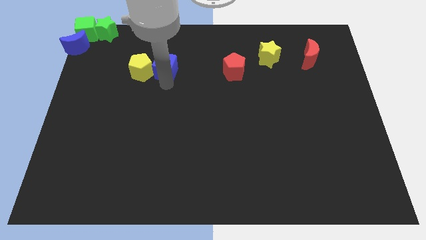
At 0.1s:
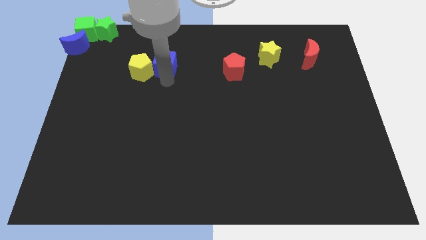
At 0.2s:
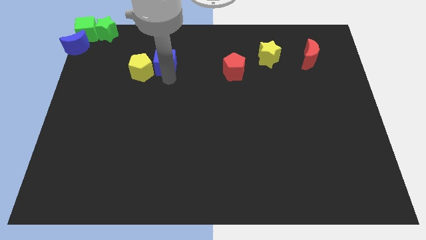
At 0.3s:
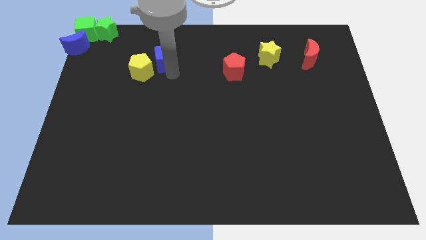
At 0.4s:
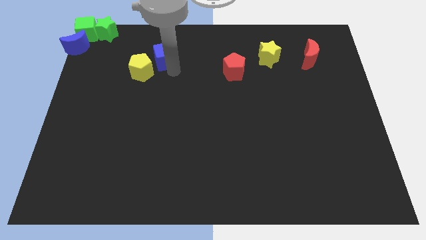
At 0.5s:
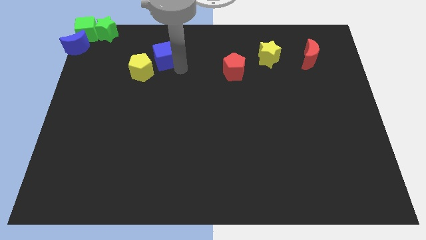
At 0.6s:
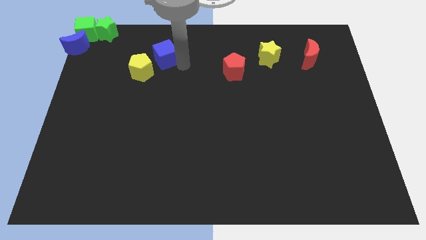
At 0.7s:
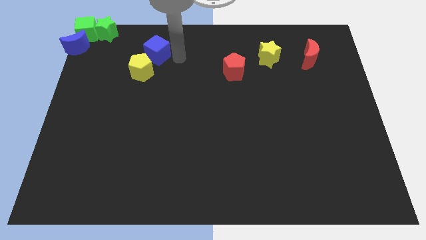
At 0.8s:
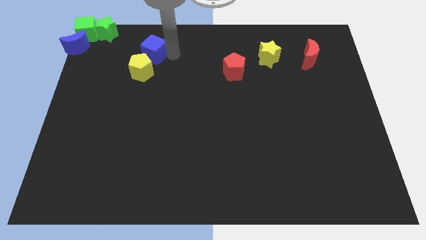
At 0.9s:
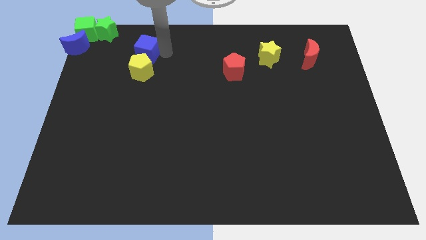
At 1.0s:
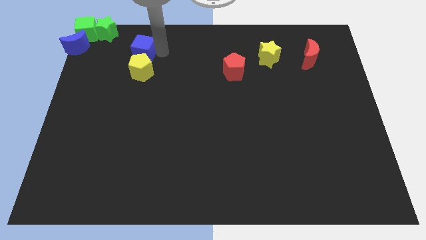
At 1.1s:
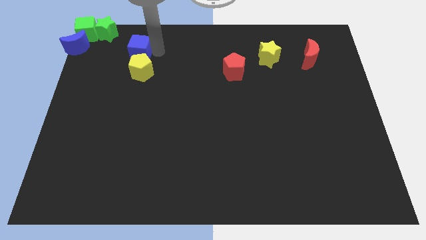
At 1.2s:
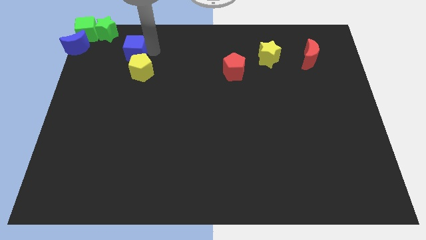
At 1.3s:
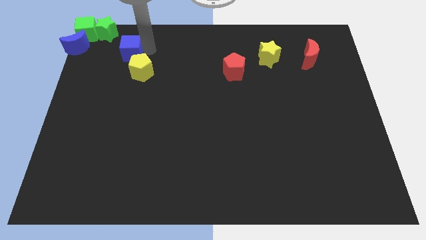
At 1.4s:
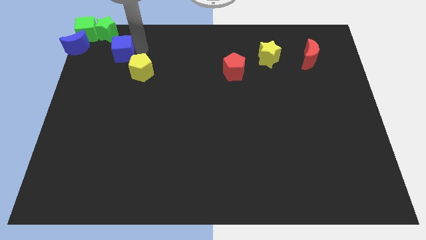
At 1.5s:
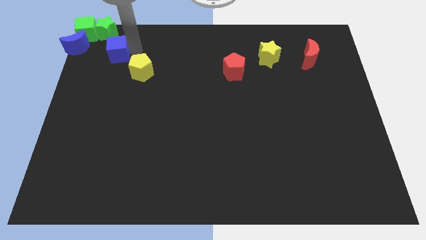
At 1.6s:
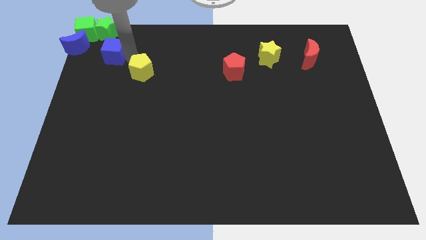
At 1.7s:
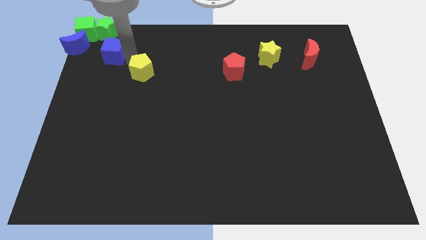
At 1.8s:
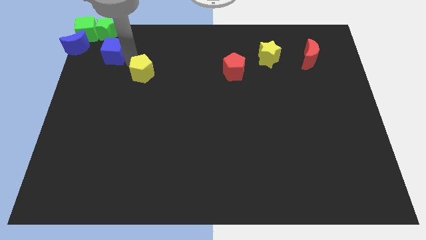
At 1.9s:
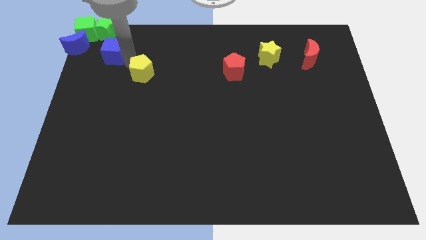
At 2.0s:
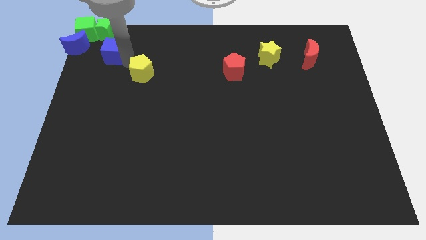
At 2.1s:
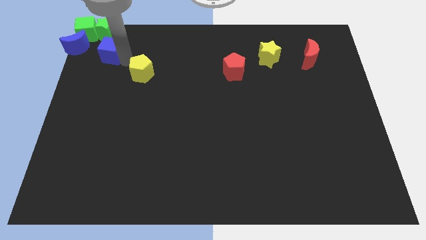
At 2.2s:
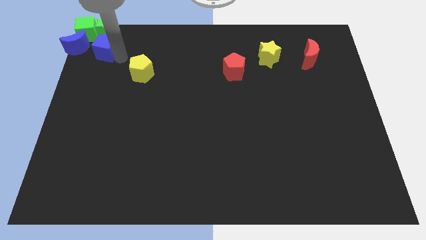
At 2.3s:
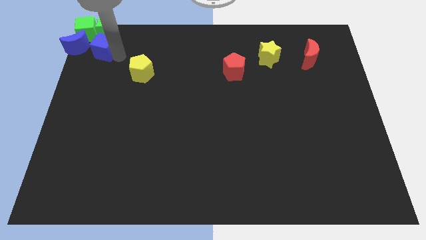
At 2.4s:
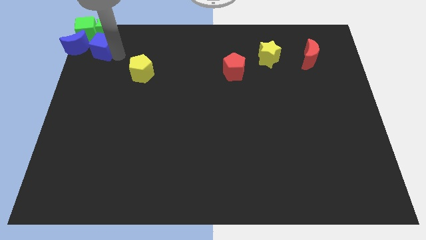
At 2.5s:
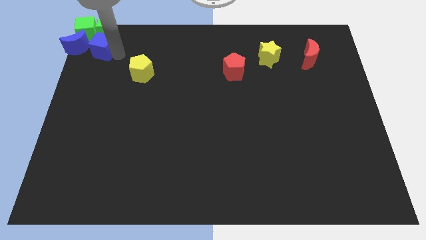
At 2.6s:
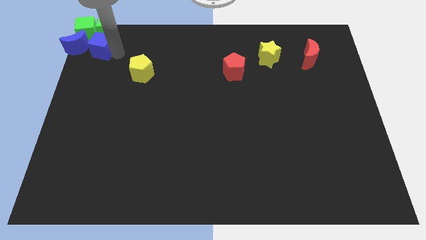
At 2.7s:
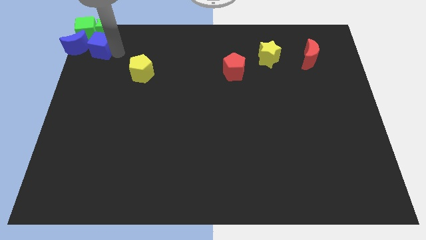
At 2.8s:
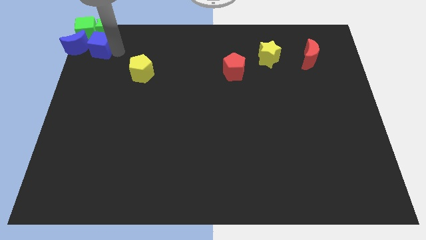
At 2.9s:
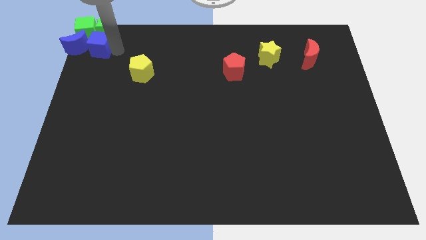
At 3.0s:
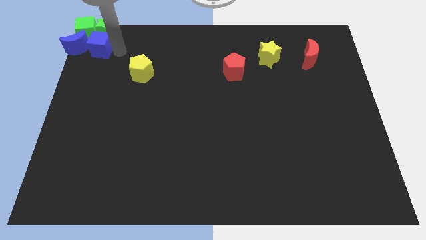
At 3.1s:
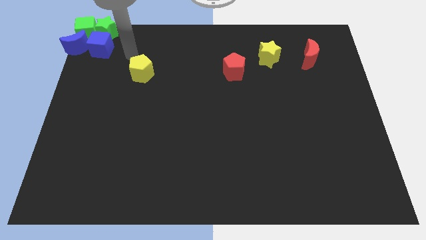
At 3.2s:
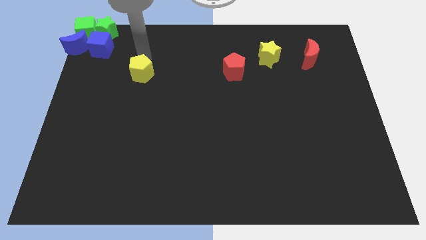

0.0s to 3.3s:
slide the blue cube to the right side of the blue crescent

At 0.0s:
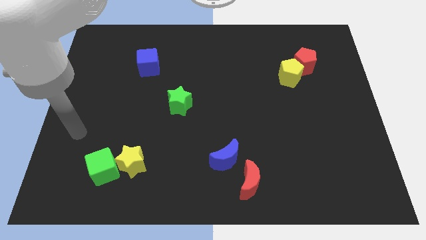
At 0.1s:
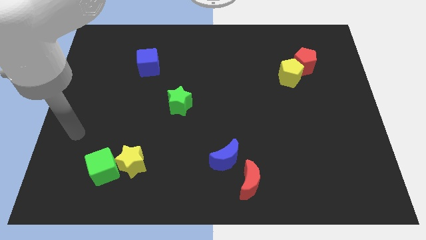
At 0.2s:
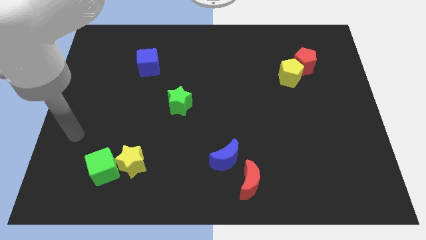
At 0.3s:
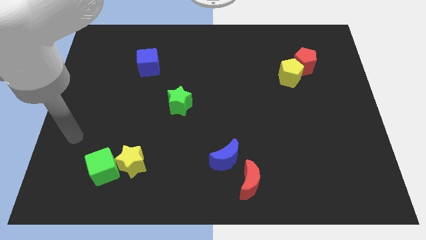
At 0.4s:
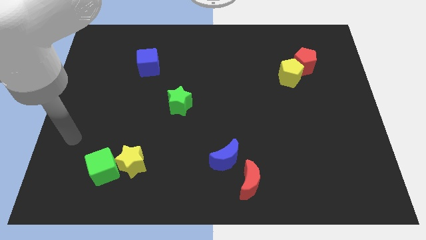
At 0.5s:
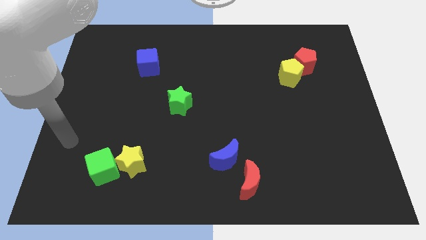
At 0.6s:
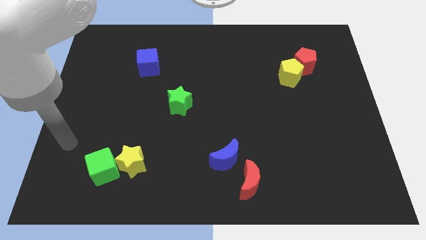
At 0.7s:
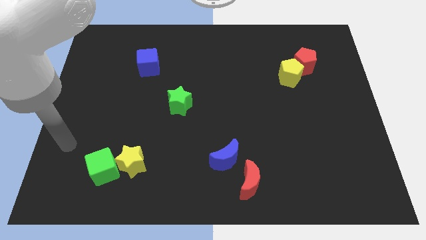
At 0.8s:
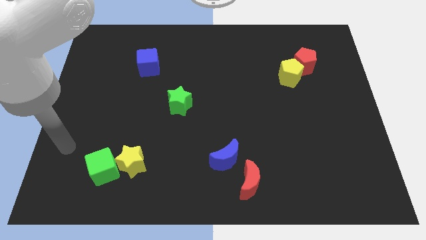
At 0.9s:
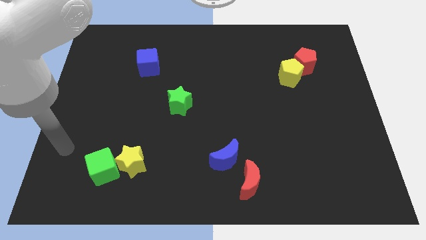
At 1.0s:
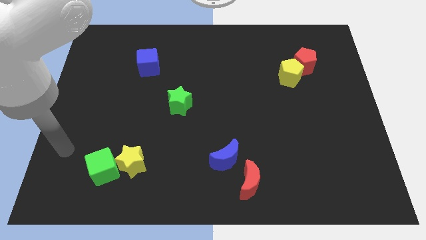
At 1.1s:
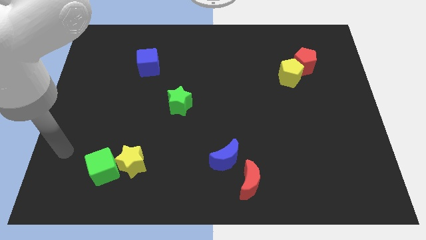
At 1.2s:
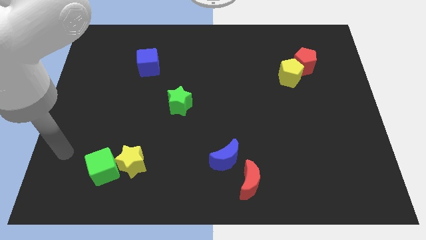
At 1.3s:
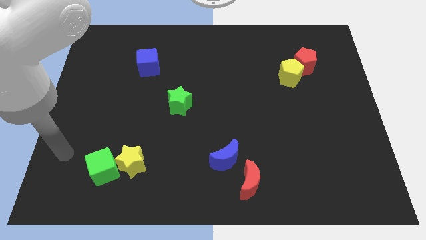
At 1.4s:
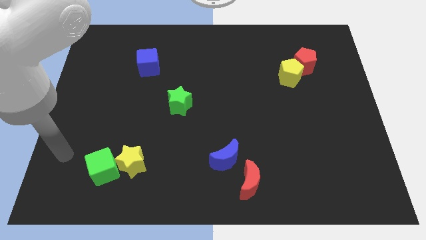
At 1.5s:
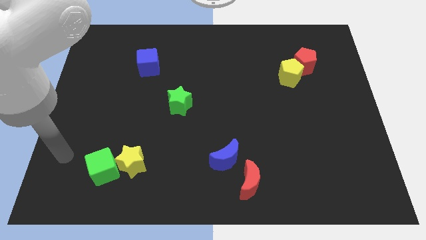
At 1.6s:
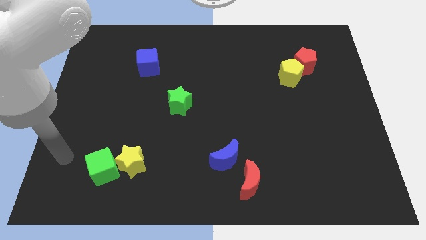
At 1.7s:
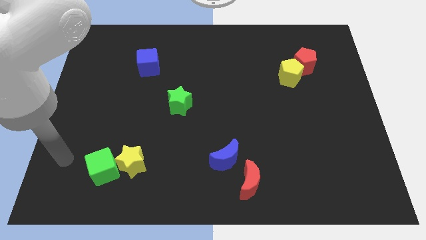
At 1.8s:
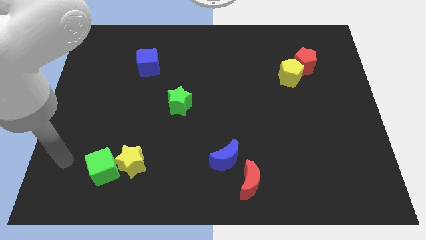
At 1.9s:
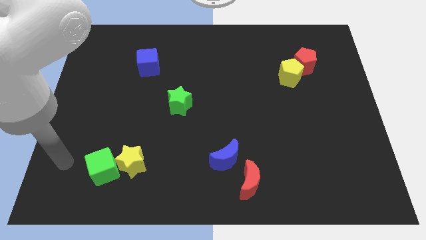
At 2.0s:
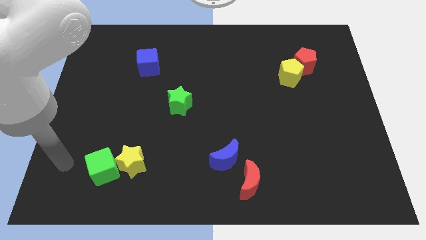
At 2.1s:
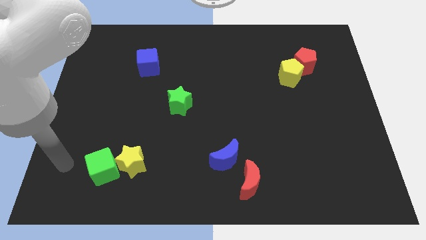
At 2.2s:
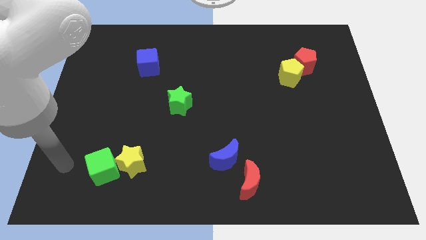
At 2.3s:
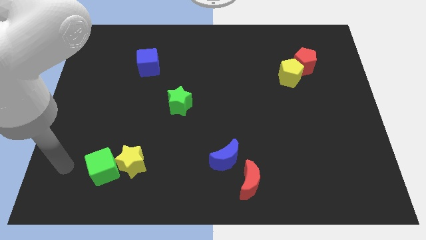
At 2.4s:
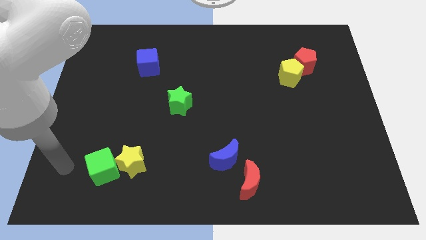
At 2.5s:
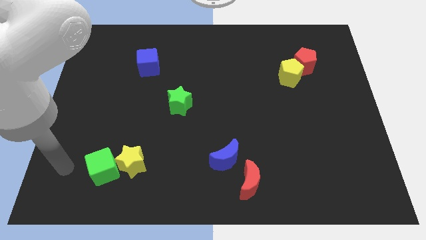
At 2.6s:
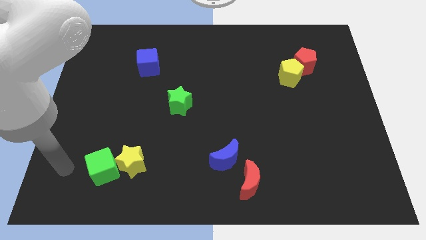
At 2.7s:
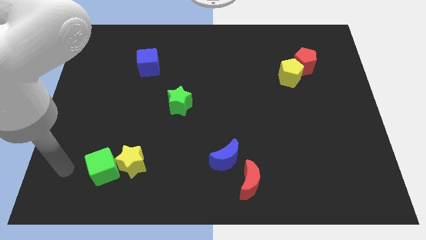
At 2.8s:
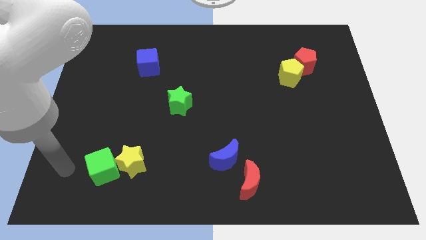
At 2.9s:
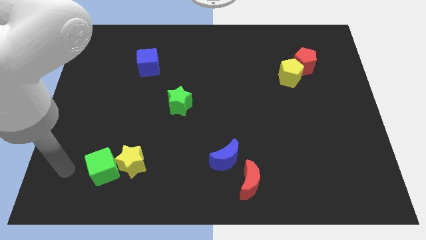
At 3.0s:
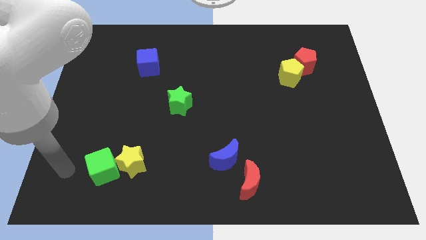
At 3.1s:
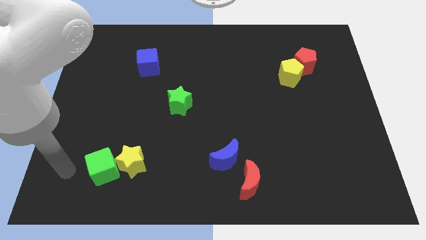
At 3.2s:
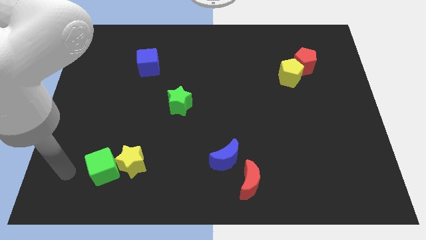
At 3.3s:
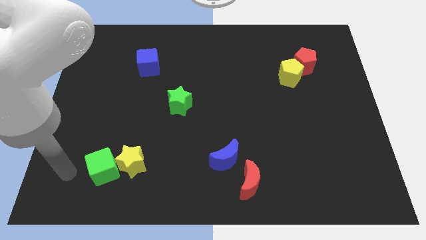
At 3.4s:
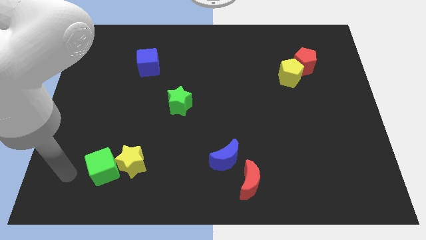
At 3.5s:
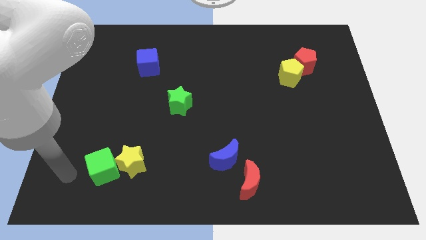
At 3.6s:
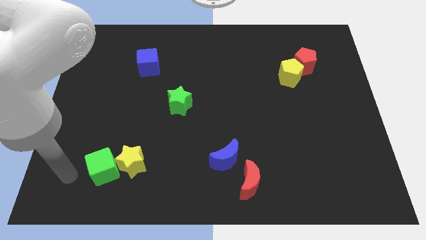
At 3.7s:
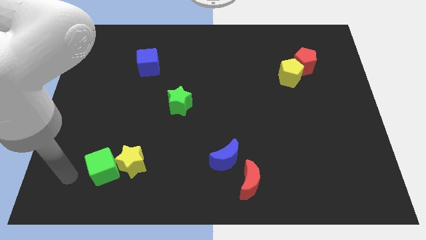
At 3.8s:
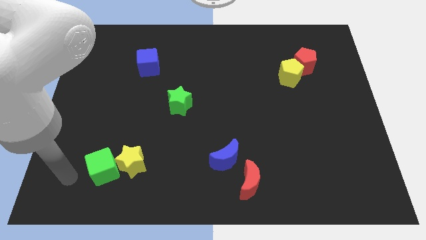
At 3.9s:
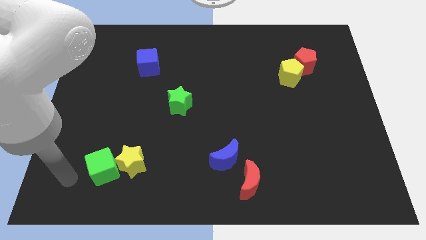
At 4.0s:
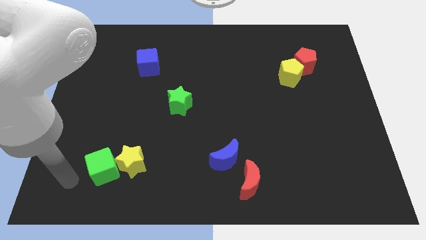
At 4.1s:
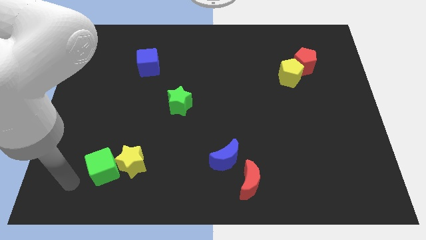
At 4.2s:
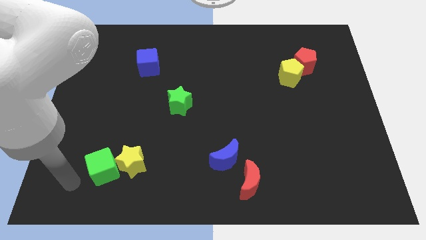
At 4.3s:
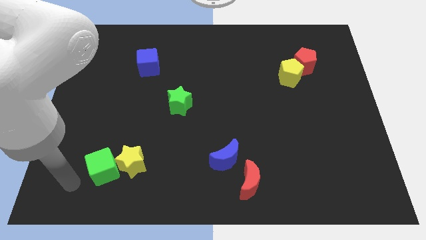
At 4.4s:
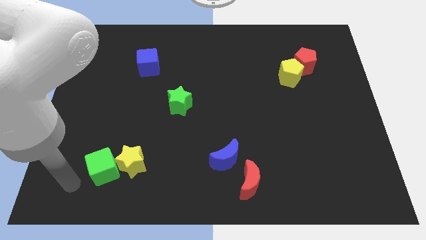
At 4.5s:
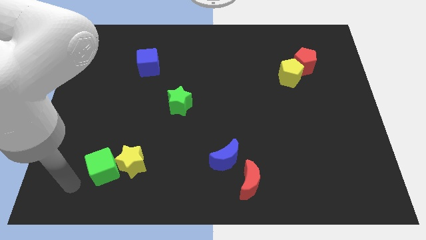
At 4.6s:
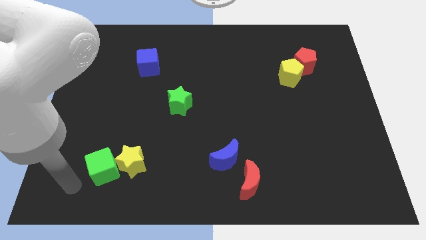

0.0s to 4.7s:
go near the green cube

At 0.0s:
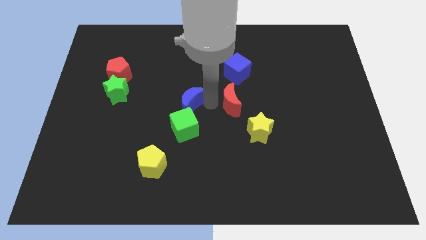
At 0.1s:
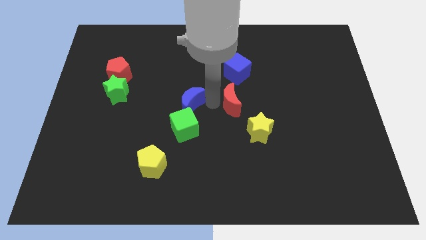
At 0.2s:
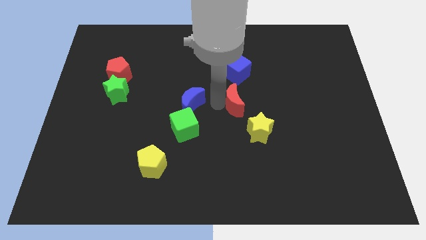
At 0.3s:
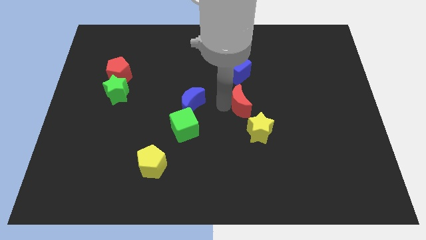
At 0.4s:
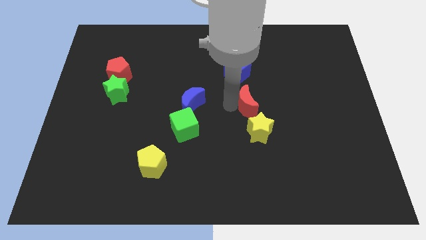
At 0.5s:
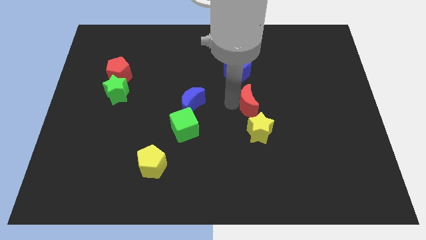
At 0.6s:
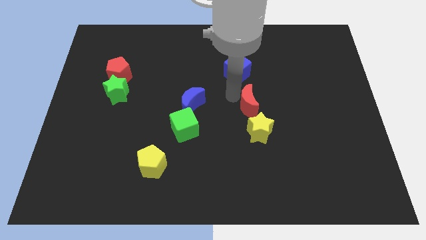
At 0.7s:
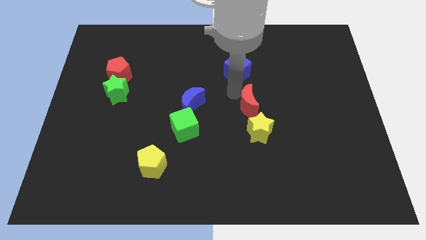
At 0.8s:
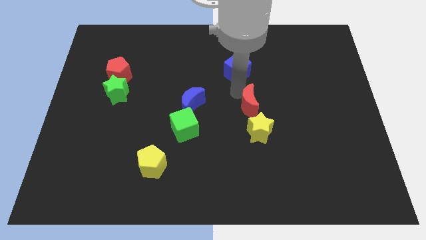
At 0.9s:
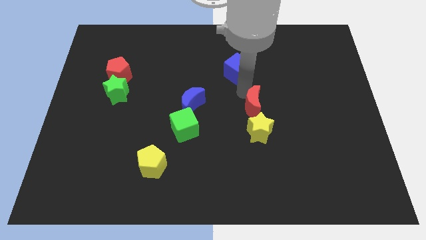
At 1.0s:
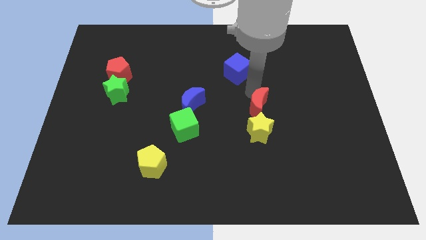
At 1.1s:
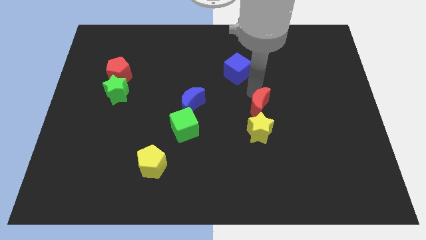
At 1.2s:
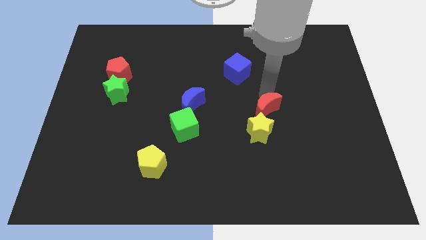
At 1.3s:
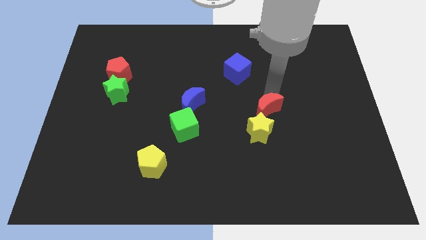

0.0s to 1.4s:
place the red crescent above the yellow star
